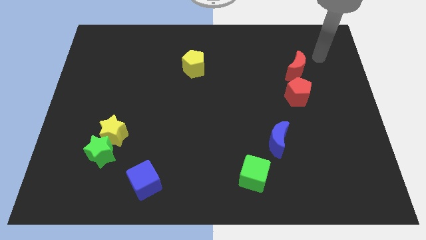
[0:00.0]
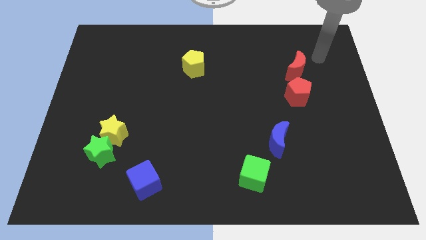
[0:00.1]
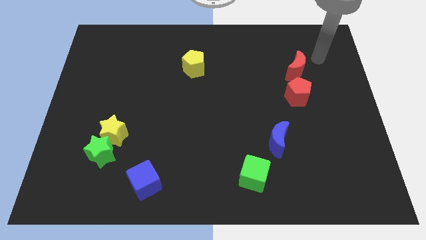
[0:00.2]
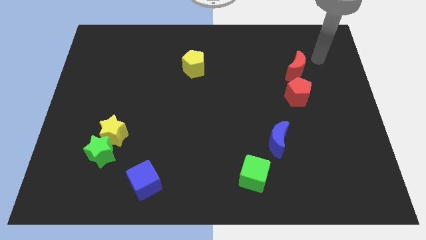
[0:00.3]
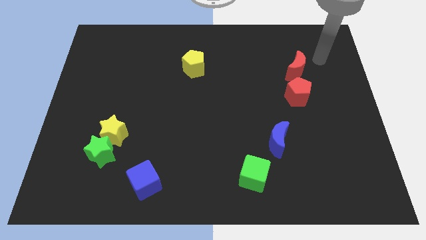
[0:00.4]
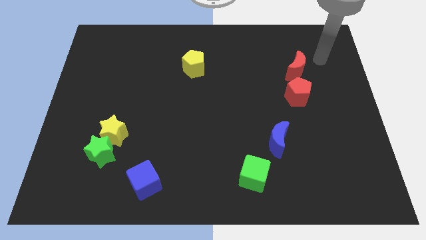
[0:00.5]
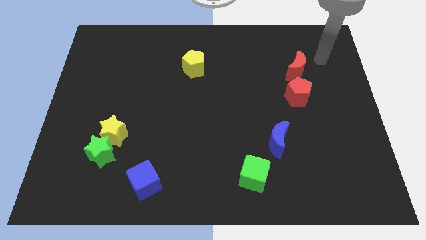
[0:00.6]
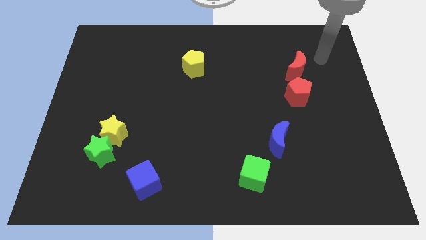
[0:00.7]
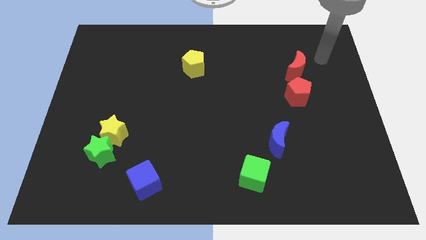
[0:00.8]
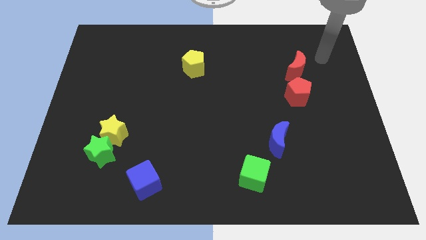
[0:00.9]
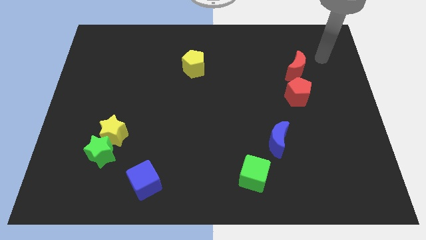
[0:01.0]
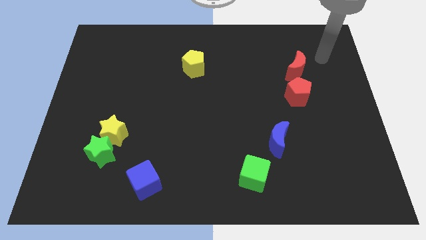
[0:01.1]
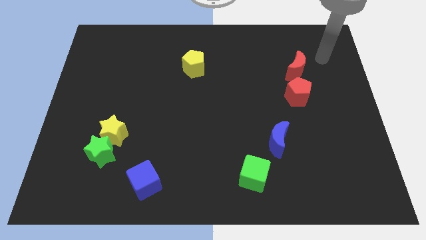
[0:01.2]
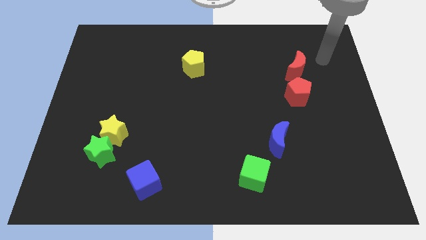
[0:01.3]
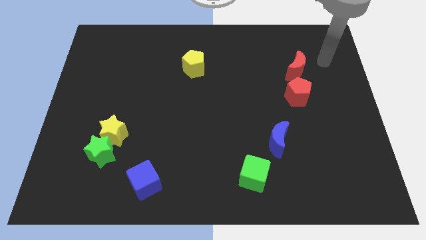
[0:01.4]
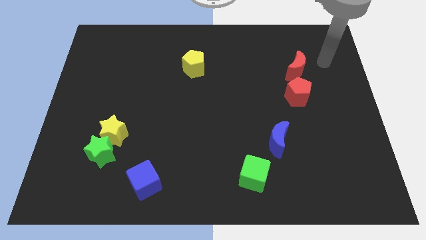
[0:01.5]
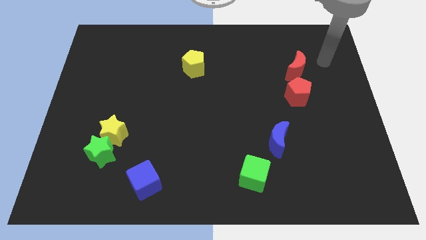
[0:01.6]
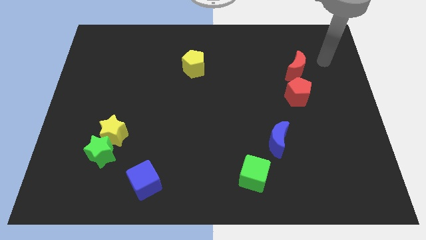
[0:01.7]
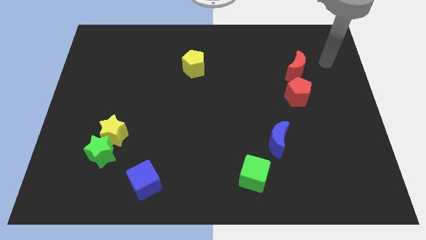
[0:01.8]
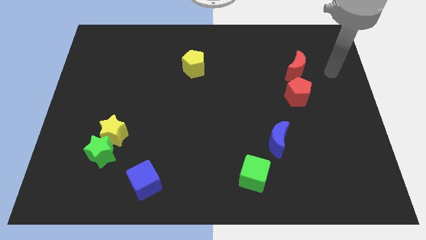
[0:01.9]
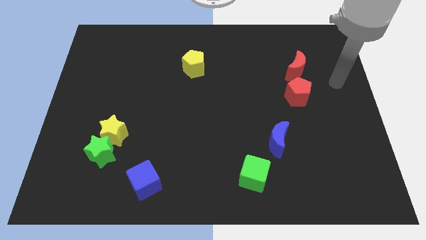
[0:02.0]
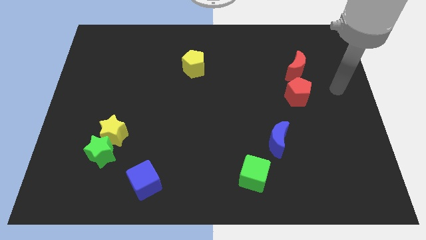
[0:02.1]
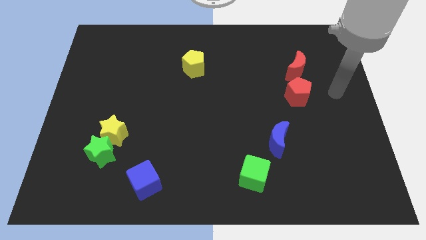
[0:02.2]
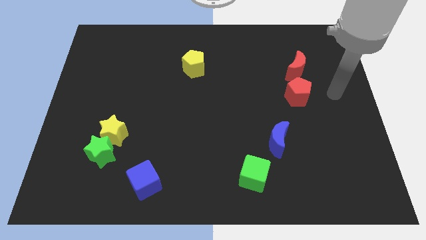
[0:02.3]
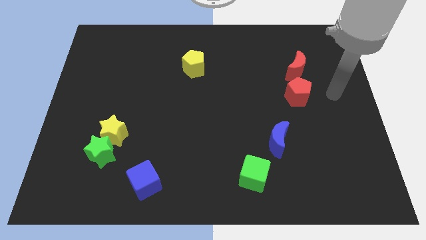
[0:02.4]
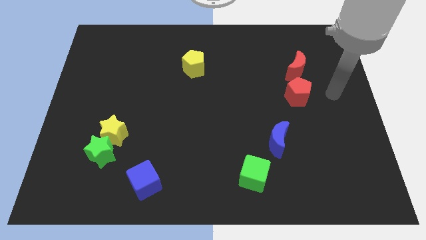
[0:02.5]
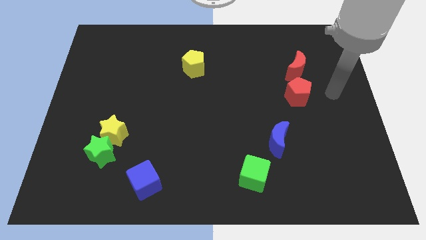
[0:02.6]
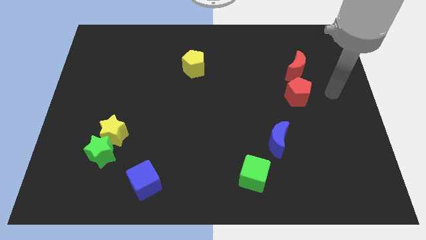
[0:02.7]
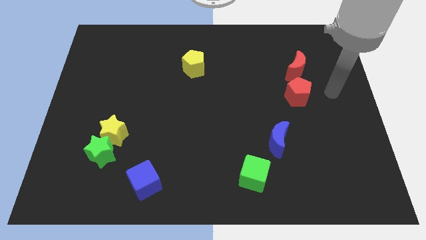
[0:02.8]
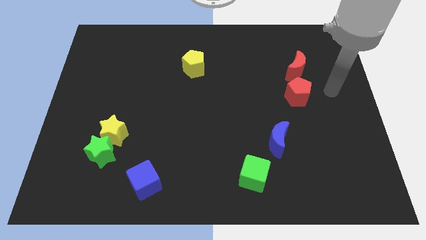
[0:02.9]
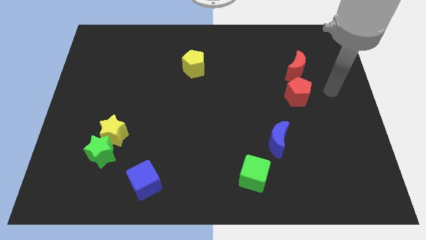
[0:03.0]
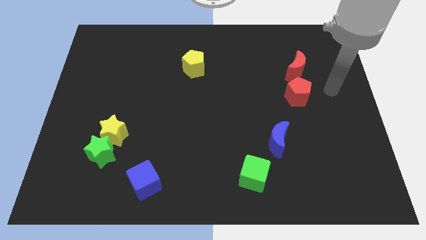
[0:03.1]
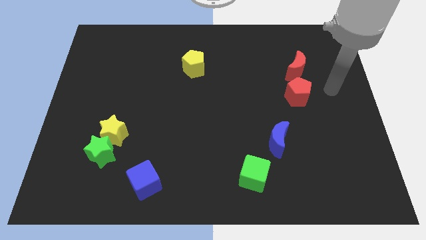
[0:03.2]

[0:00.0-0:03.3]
move your arm to the right side of the red pentagon

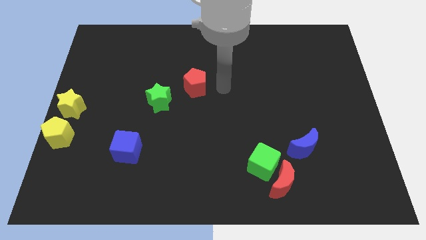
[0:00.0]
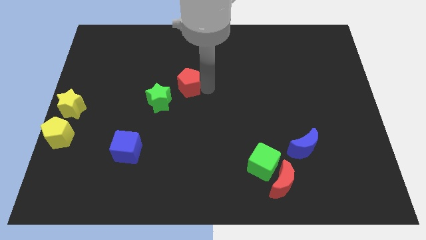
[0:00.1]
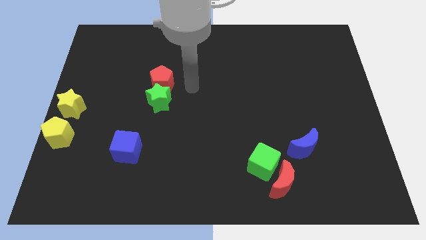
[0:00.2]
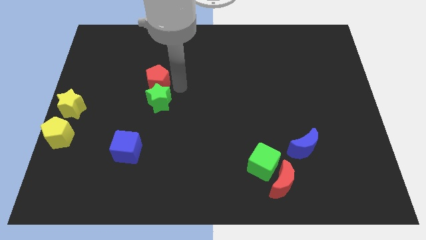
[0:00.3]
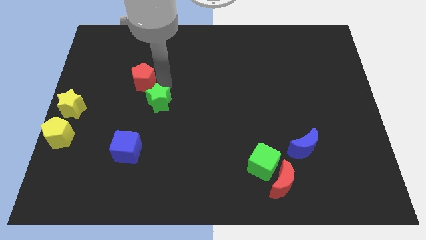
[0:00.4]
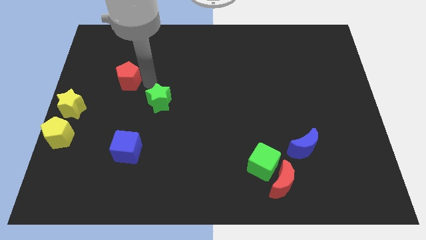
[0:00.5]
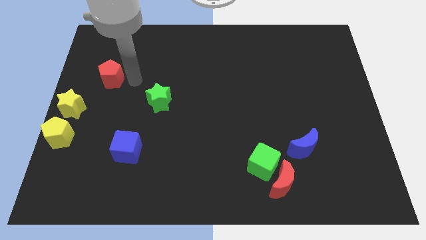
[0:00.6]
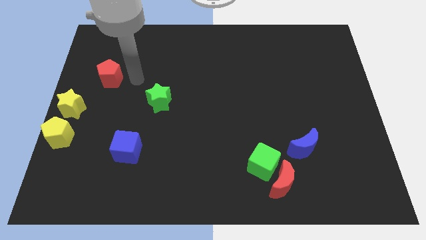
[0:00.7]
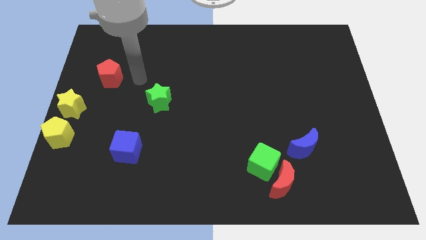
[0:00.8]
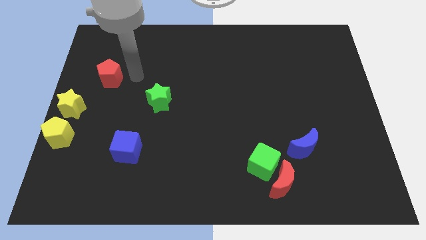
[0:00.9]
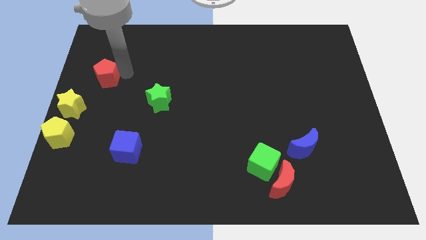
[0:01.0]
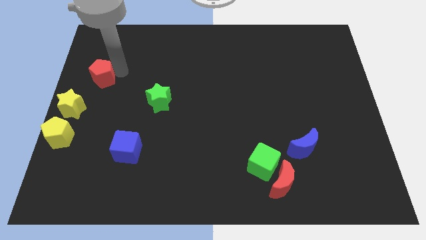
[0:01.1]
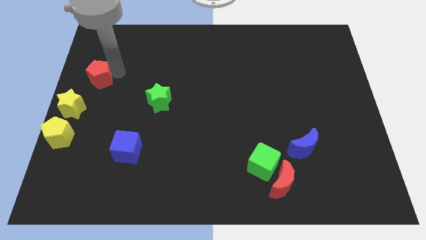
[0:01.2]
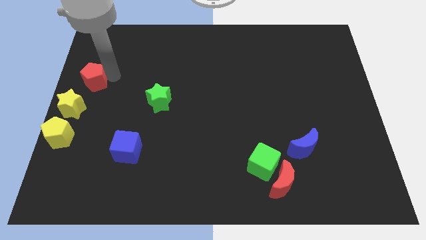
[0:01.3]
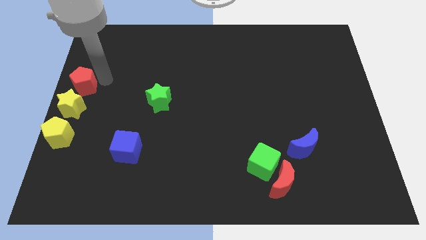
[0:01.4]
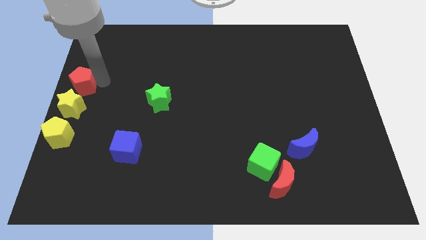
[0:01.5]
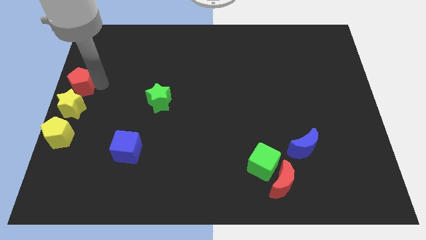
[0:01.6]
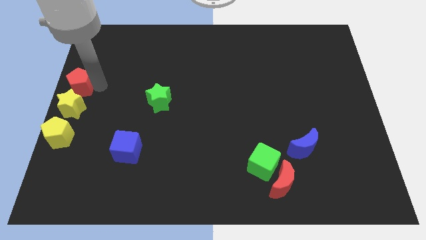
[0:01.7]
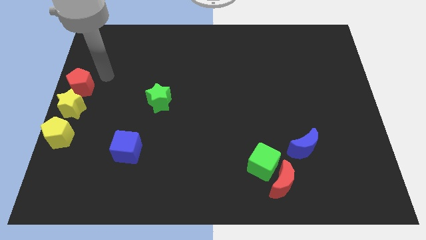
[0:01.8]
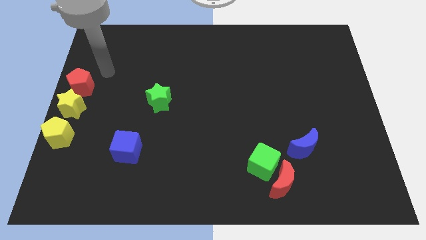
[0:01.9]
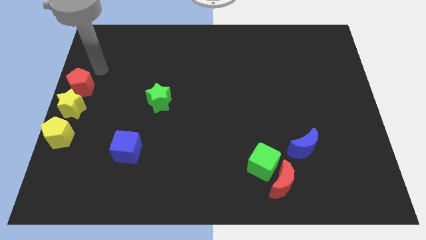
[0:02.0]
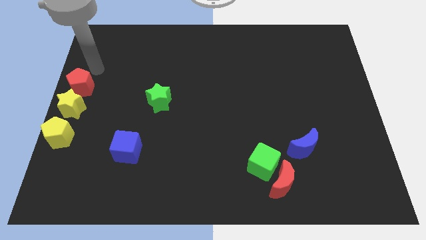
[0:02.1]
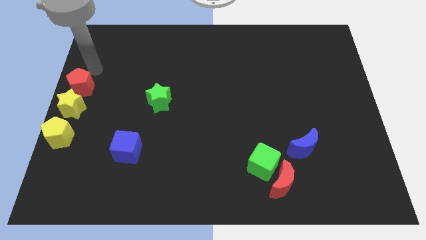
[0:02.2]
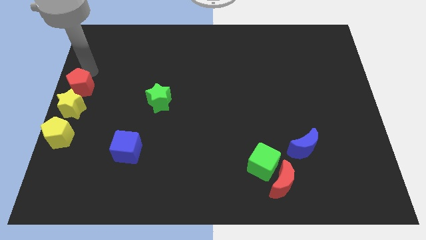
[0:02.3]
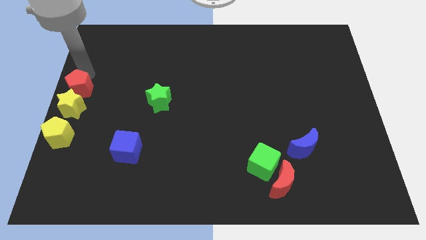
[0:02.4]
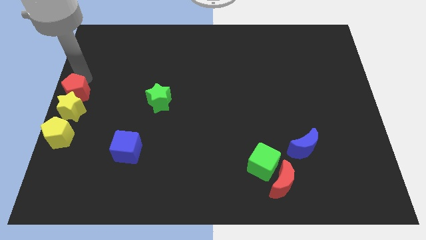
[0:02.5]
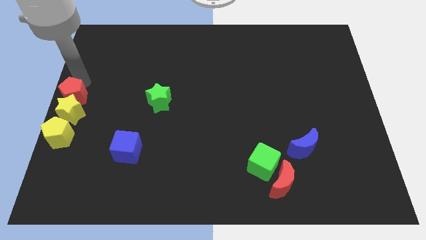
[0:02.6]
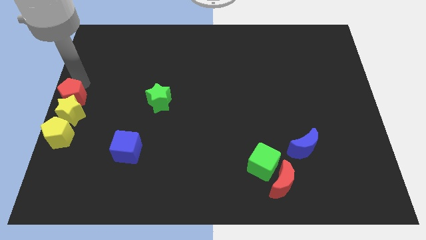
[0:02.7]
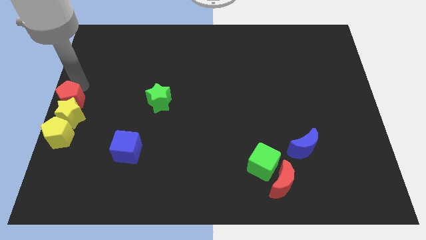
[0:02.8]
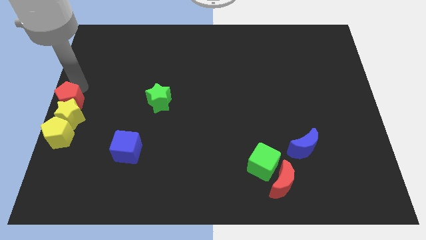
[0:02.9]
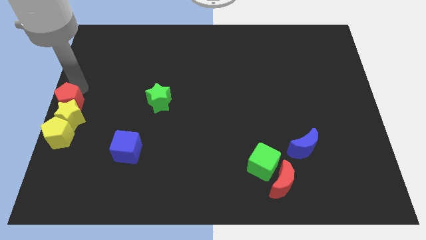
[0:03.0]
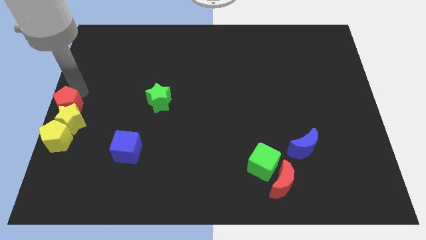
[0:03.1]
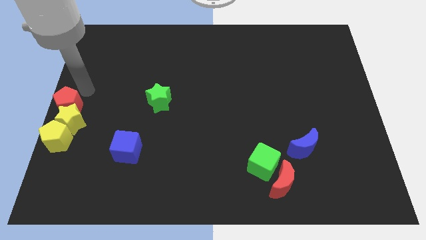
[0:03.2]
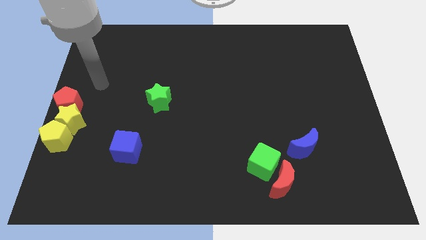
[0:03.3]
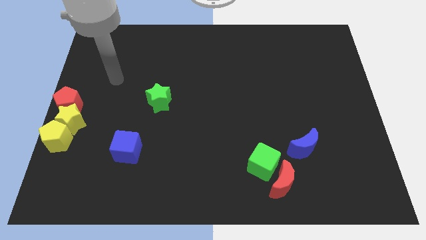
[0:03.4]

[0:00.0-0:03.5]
push the red pentagon into the yellow blocks

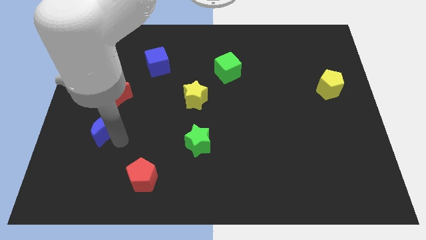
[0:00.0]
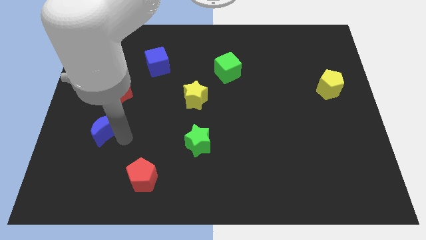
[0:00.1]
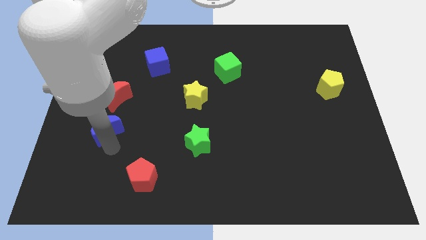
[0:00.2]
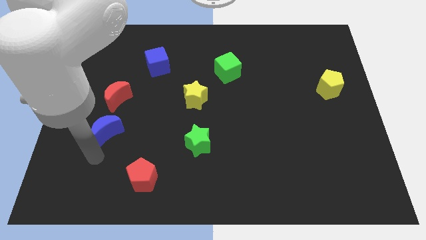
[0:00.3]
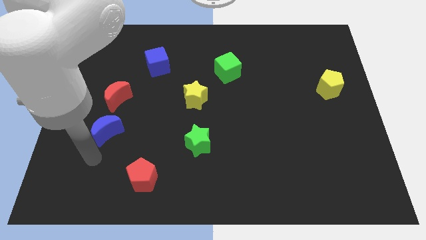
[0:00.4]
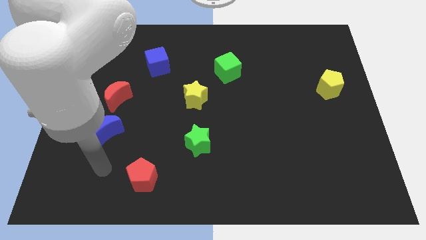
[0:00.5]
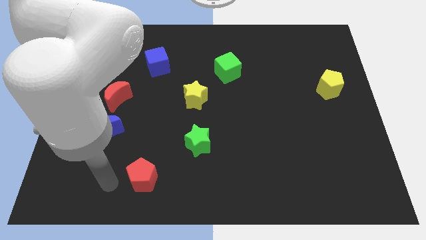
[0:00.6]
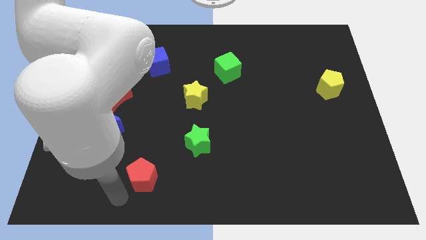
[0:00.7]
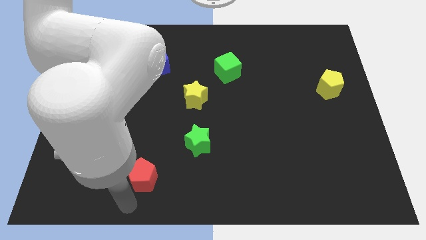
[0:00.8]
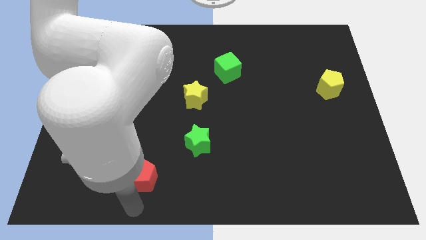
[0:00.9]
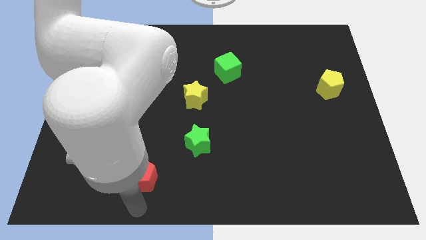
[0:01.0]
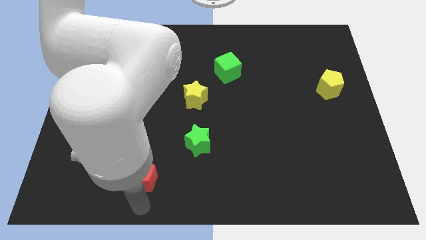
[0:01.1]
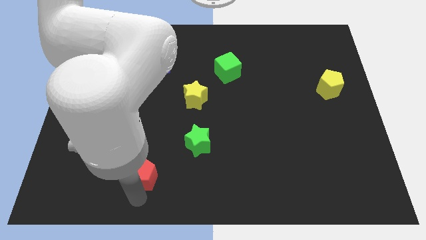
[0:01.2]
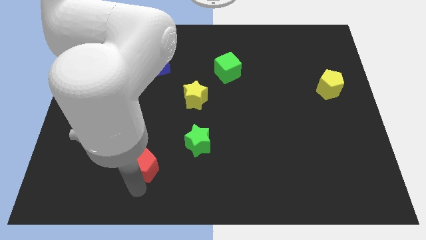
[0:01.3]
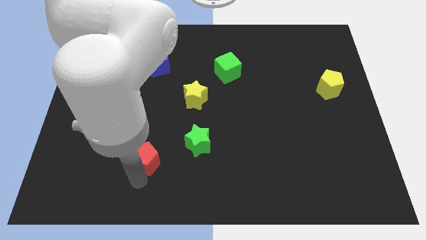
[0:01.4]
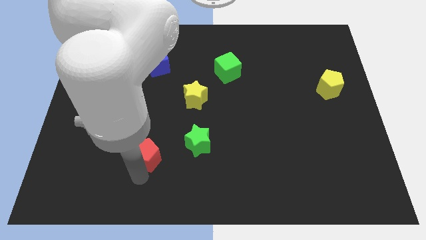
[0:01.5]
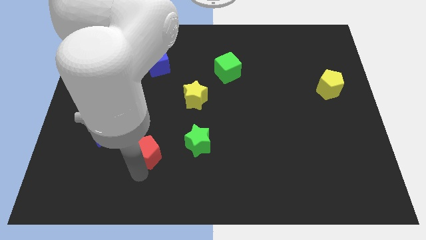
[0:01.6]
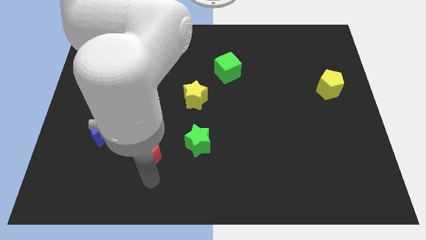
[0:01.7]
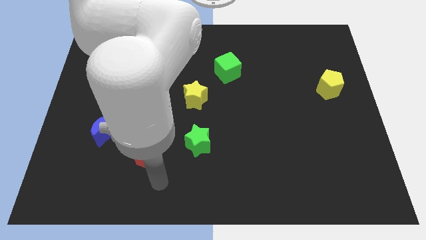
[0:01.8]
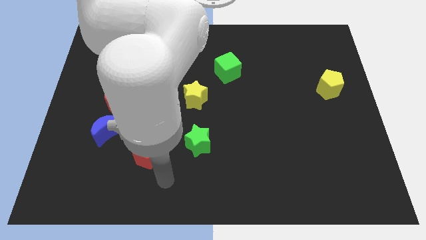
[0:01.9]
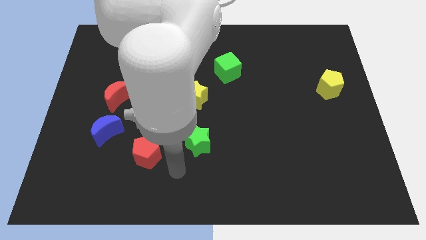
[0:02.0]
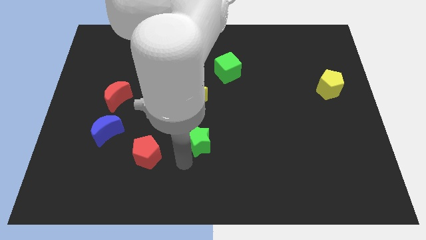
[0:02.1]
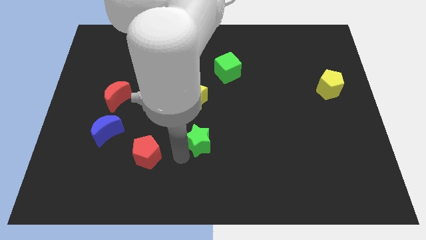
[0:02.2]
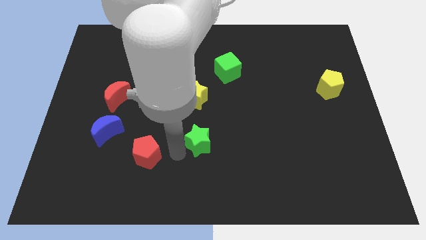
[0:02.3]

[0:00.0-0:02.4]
move the red pentagon in between green star and blue crescent
